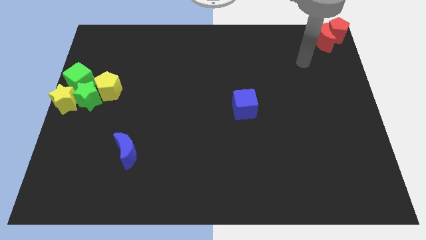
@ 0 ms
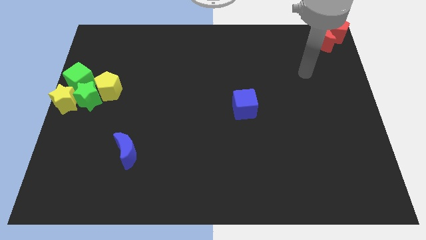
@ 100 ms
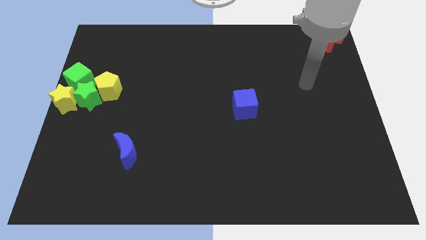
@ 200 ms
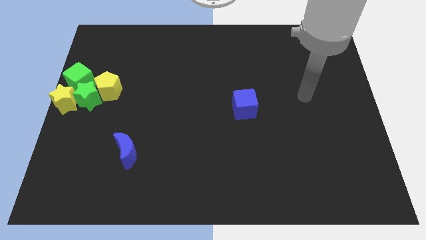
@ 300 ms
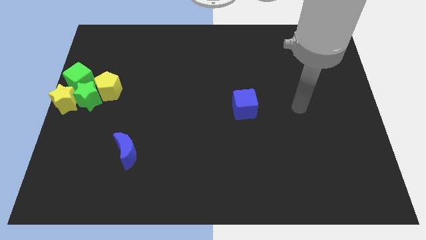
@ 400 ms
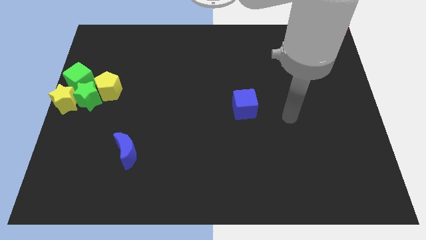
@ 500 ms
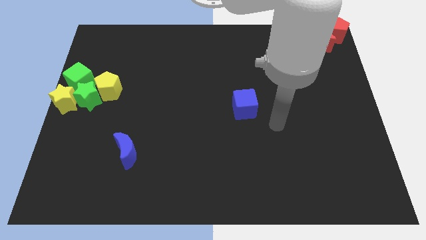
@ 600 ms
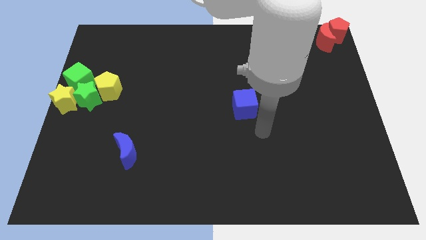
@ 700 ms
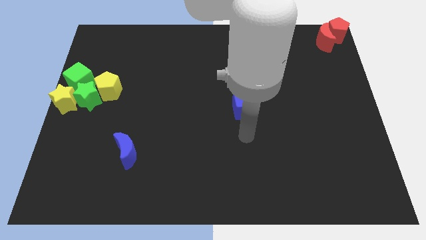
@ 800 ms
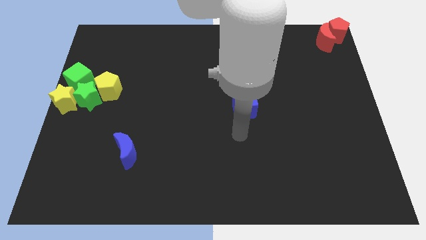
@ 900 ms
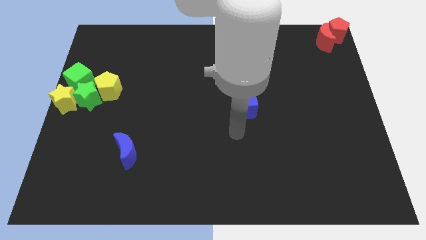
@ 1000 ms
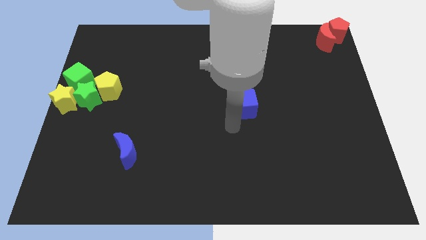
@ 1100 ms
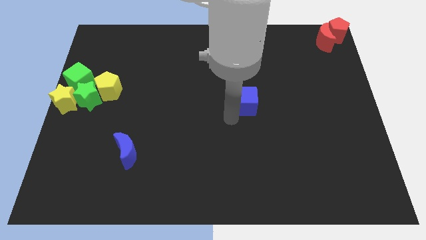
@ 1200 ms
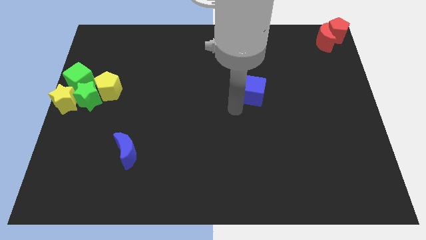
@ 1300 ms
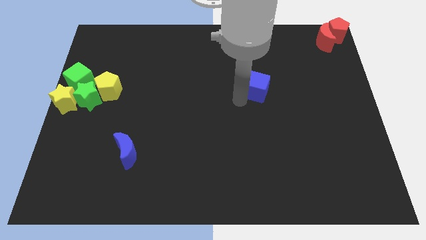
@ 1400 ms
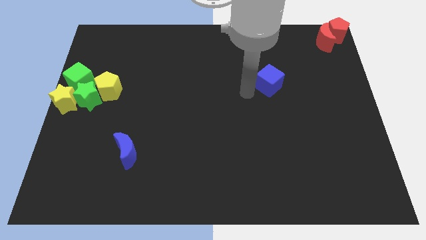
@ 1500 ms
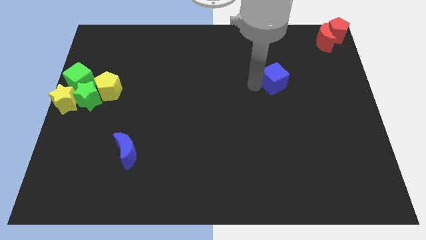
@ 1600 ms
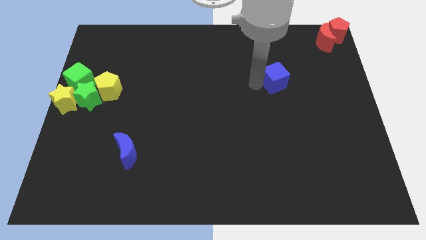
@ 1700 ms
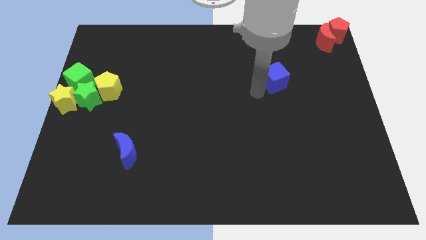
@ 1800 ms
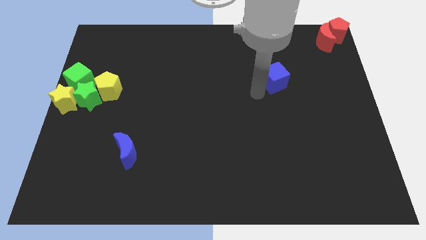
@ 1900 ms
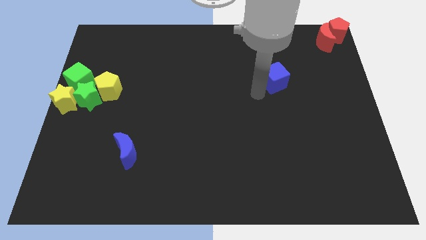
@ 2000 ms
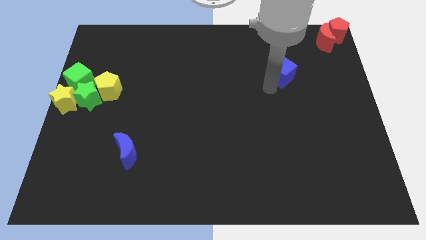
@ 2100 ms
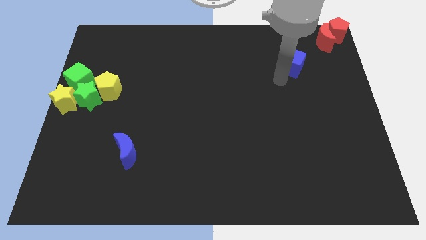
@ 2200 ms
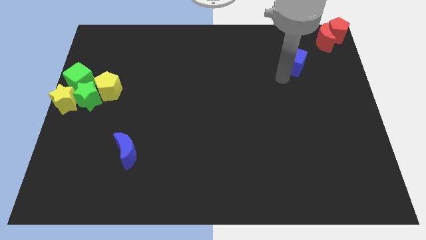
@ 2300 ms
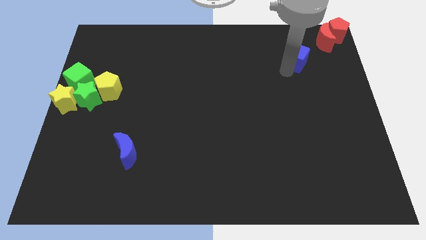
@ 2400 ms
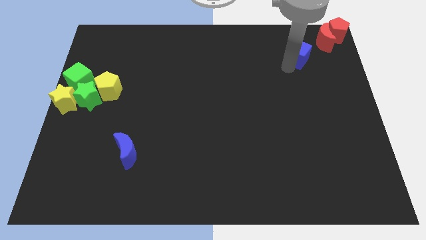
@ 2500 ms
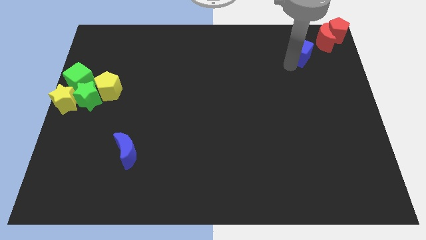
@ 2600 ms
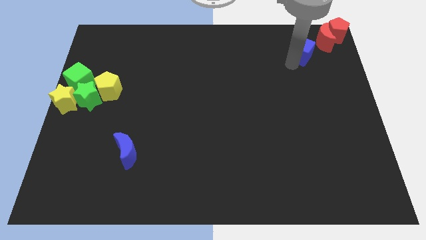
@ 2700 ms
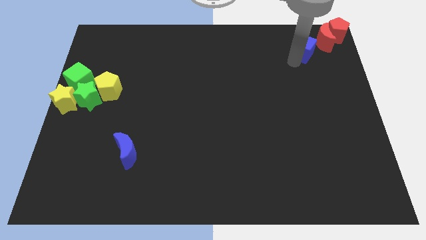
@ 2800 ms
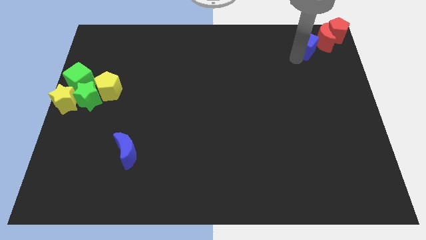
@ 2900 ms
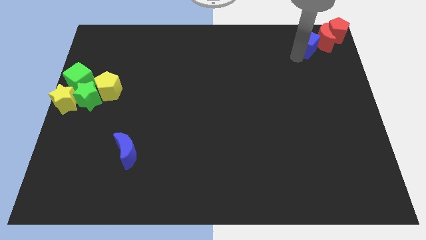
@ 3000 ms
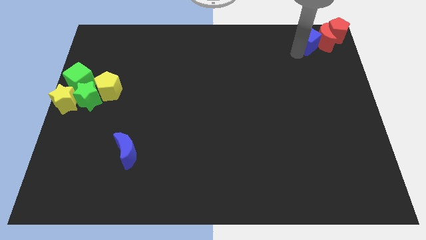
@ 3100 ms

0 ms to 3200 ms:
move the blue cube bottom right corner of the board

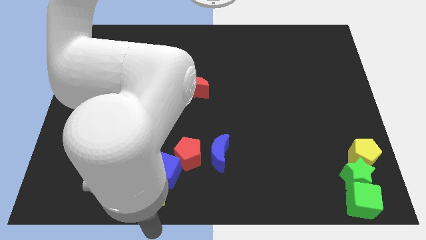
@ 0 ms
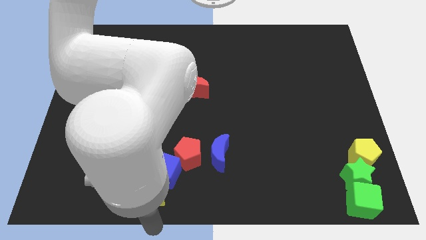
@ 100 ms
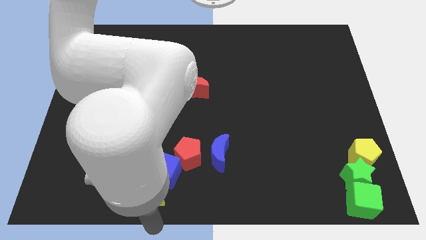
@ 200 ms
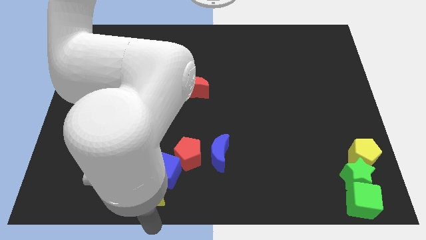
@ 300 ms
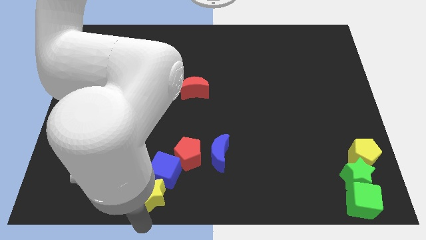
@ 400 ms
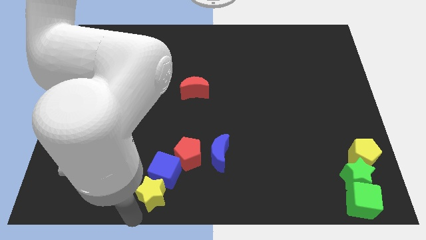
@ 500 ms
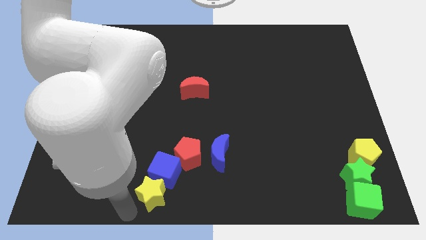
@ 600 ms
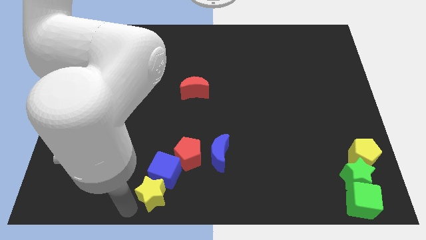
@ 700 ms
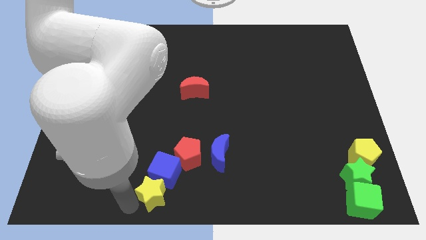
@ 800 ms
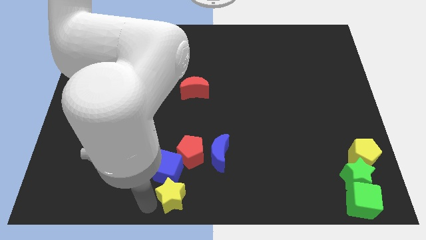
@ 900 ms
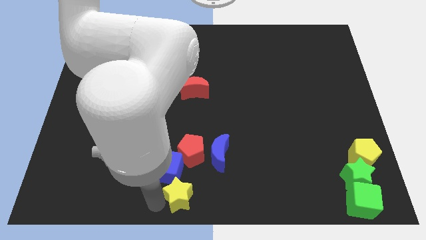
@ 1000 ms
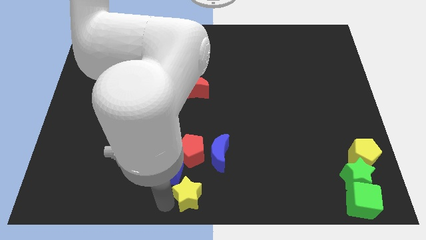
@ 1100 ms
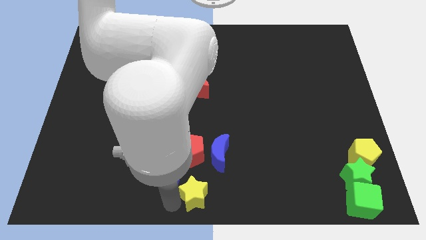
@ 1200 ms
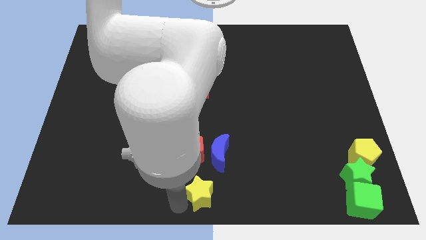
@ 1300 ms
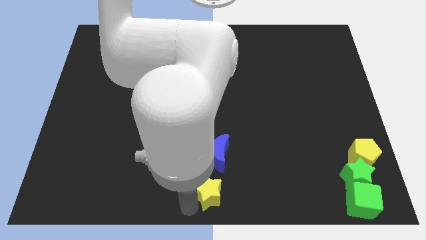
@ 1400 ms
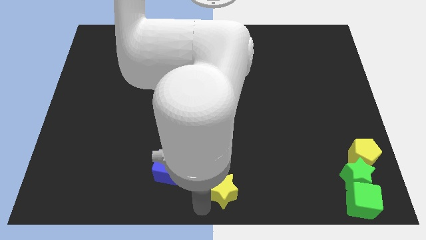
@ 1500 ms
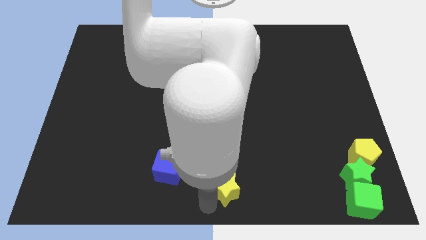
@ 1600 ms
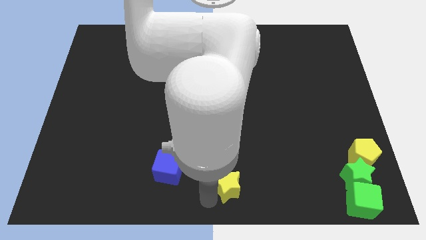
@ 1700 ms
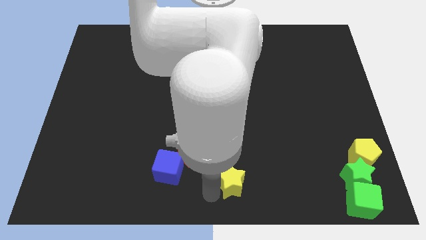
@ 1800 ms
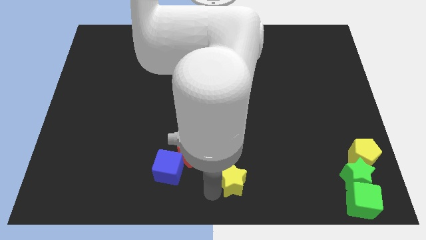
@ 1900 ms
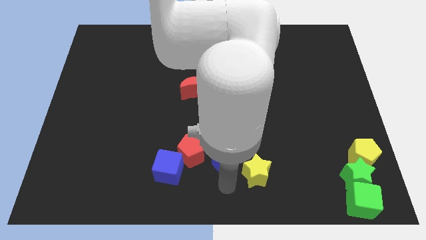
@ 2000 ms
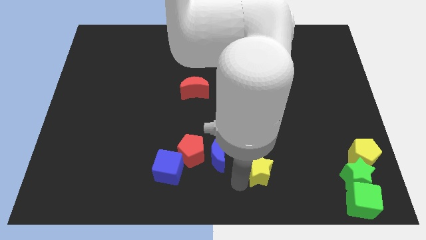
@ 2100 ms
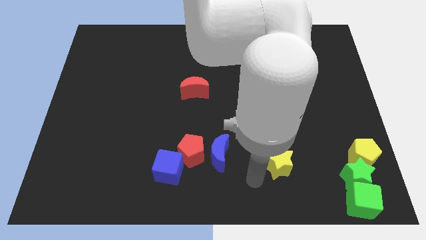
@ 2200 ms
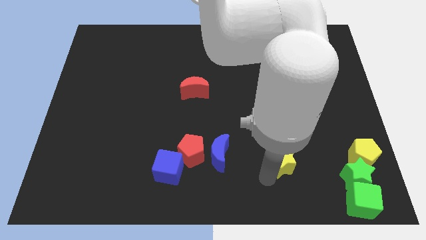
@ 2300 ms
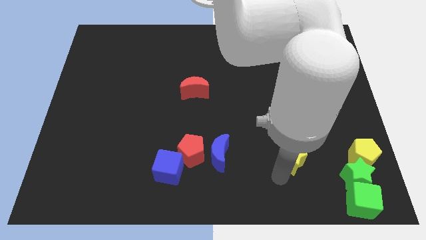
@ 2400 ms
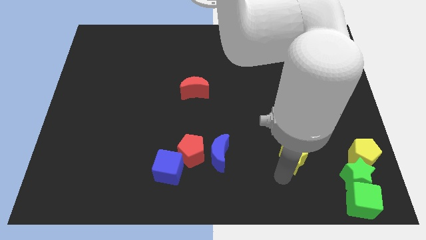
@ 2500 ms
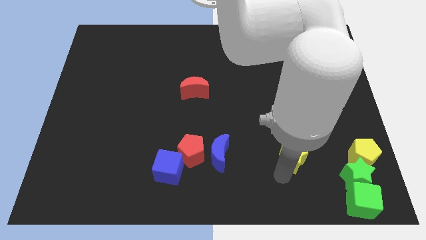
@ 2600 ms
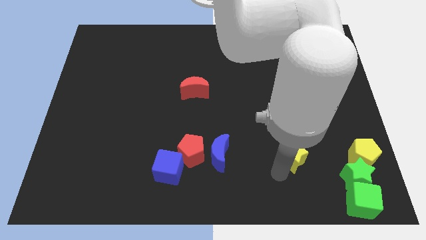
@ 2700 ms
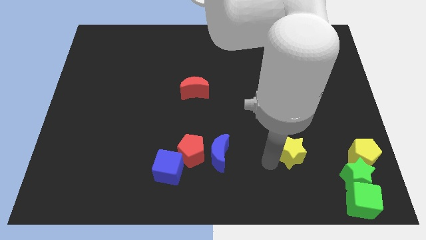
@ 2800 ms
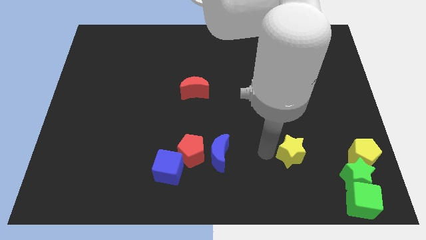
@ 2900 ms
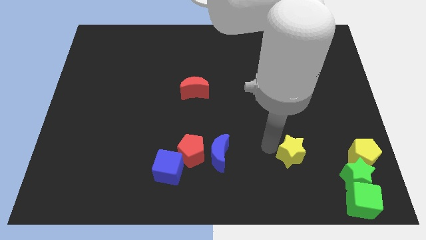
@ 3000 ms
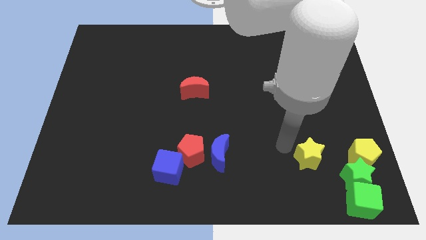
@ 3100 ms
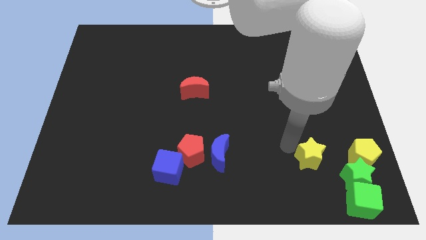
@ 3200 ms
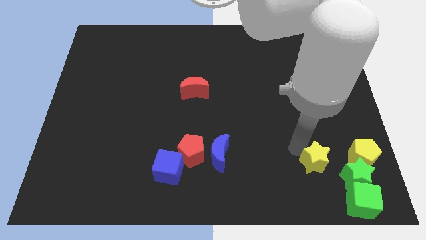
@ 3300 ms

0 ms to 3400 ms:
separate the yellow star from the group of blocks

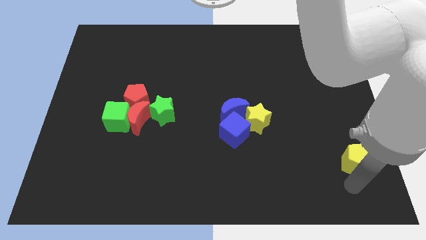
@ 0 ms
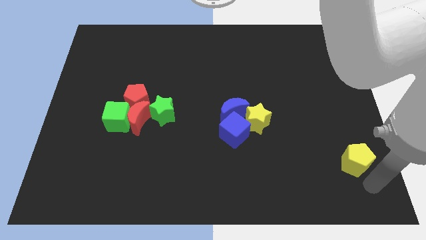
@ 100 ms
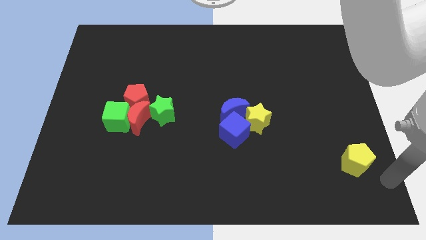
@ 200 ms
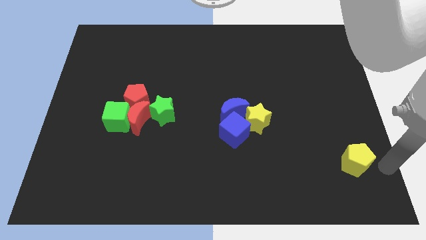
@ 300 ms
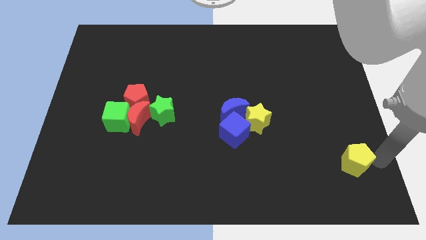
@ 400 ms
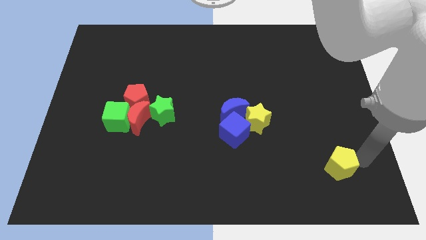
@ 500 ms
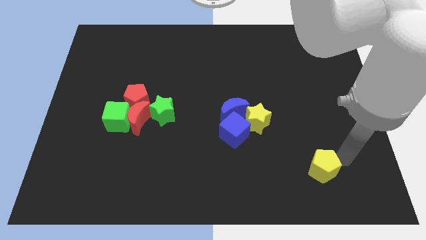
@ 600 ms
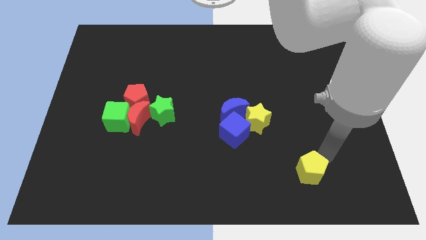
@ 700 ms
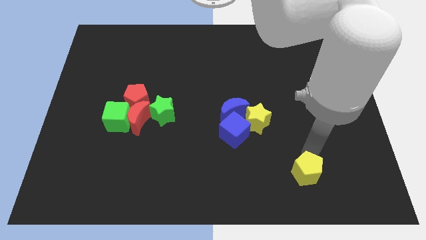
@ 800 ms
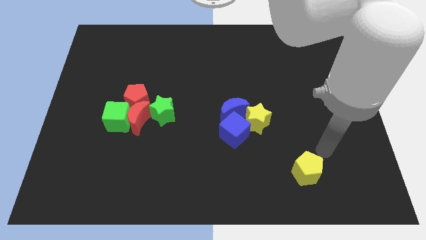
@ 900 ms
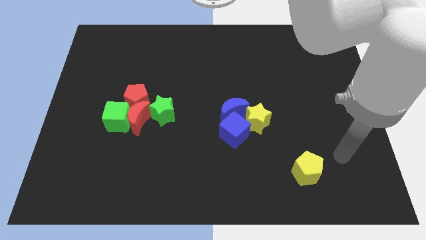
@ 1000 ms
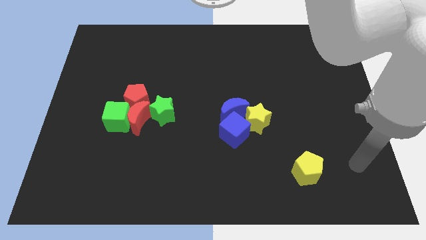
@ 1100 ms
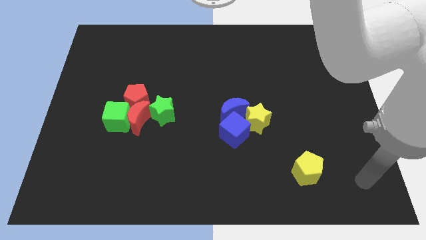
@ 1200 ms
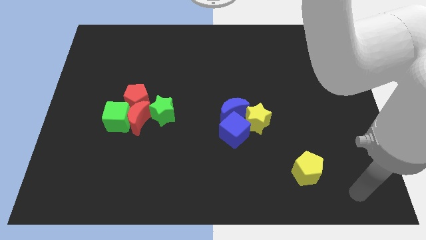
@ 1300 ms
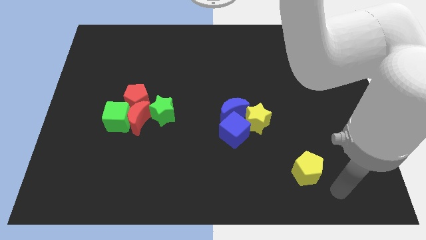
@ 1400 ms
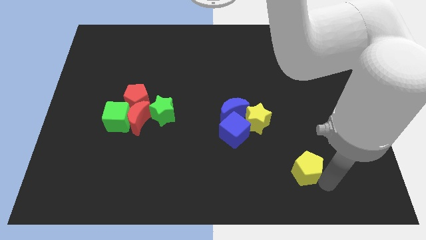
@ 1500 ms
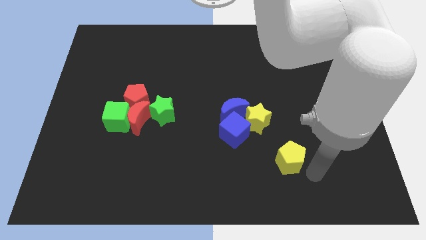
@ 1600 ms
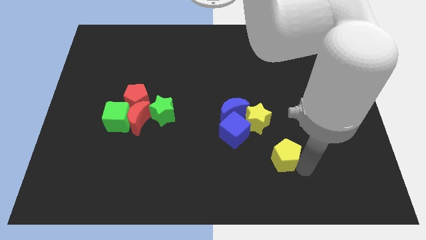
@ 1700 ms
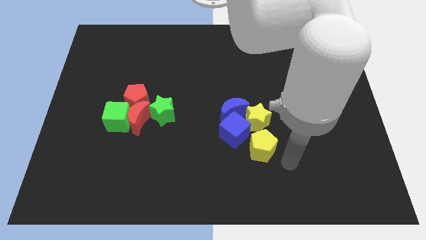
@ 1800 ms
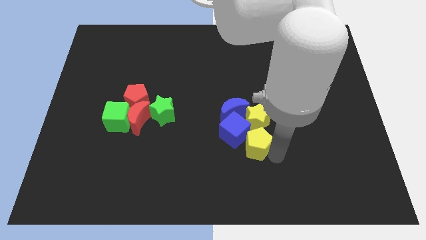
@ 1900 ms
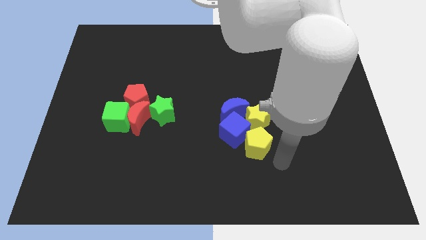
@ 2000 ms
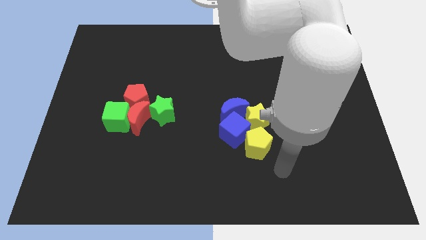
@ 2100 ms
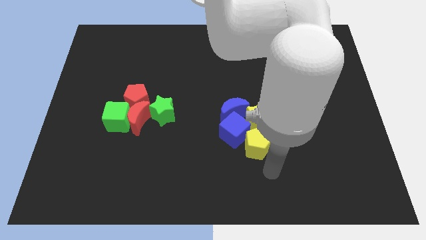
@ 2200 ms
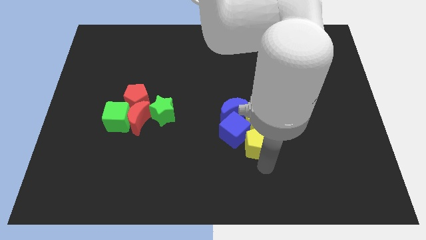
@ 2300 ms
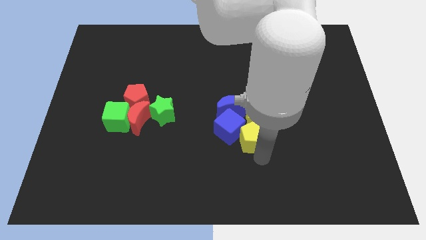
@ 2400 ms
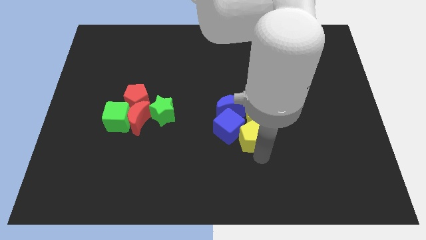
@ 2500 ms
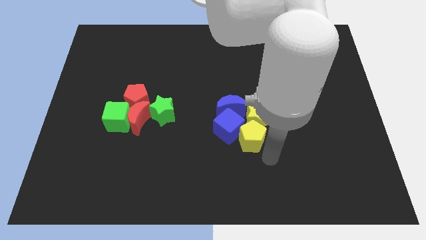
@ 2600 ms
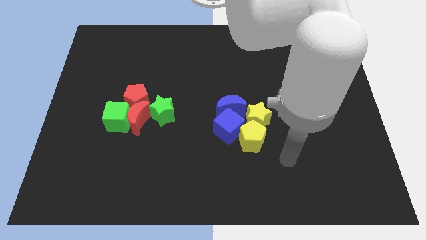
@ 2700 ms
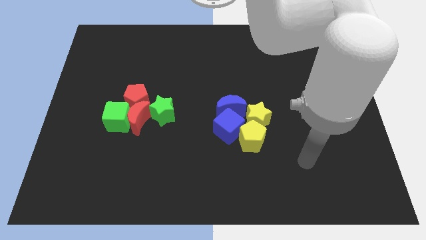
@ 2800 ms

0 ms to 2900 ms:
move the yellow pentagon to the bottom of the yellow star
